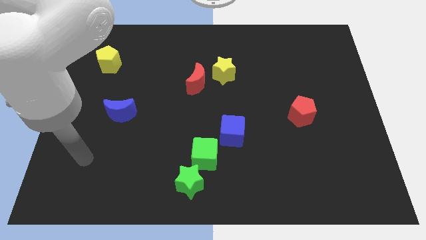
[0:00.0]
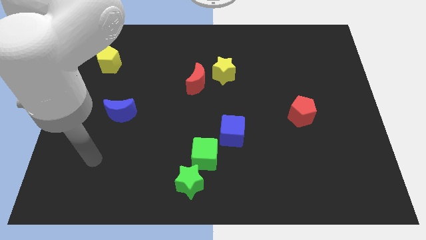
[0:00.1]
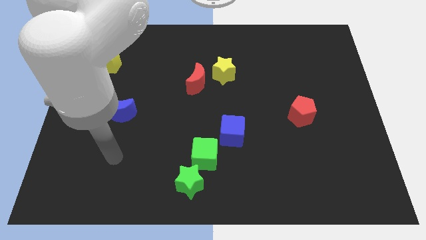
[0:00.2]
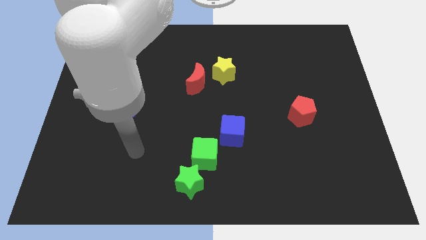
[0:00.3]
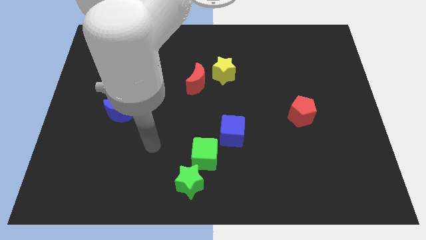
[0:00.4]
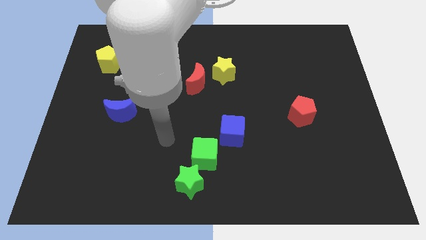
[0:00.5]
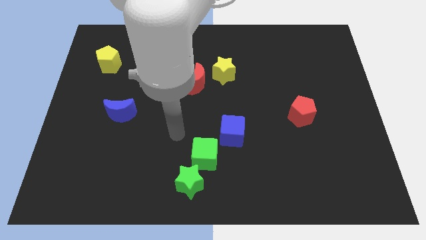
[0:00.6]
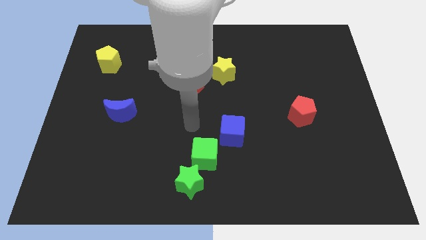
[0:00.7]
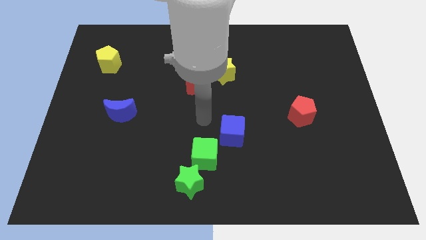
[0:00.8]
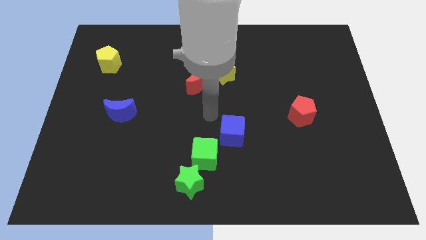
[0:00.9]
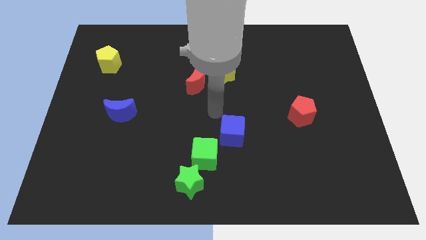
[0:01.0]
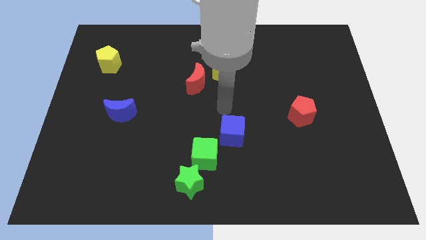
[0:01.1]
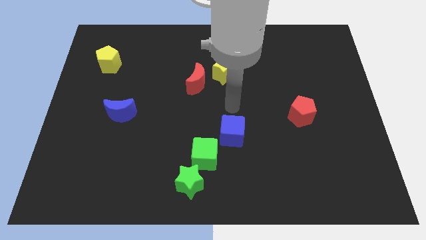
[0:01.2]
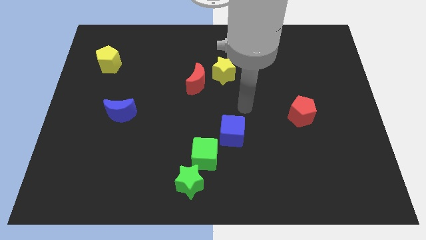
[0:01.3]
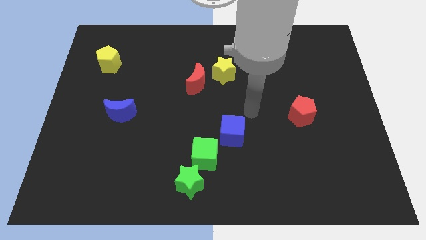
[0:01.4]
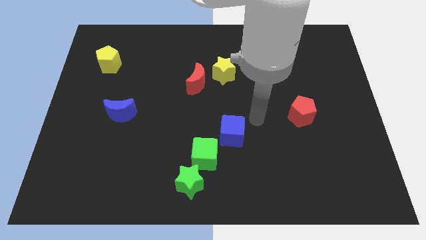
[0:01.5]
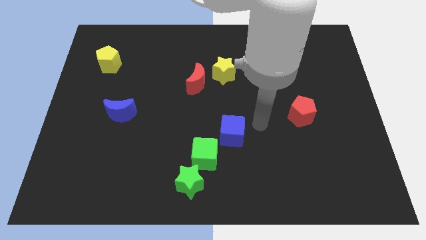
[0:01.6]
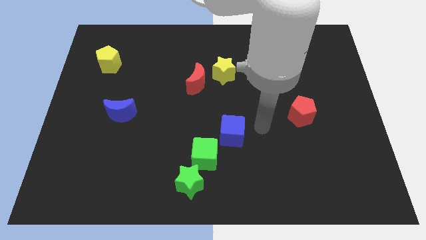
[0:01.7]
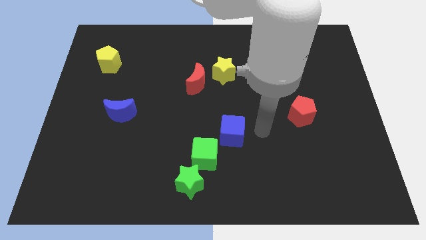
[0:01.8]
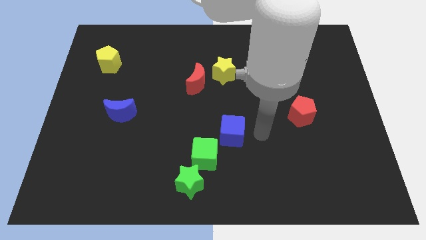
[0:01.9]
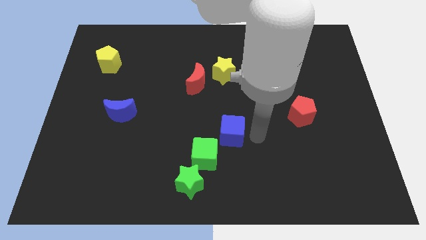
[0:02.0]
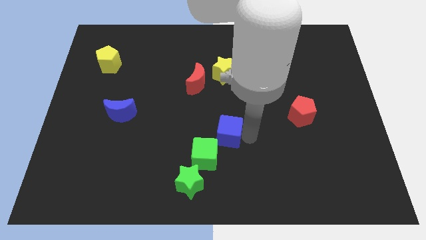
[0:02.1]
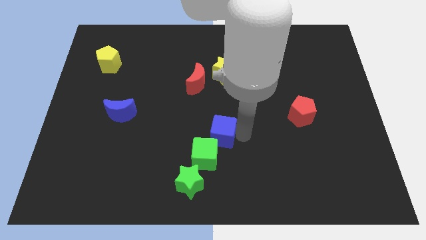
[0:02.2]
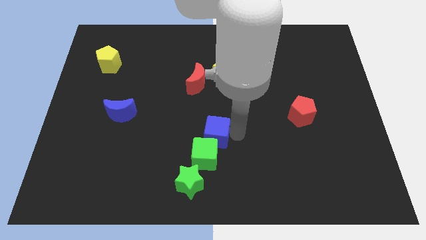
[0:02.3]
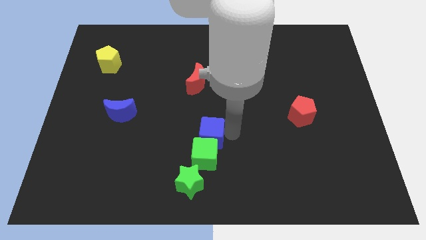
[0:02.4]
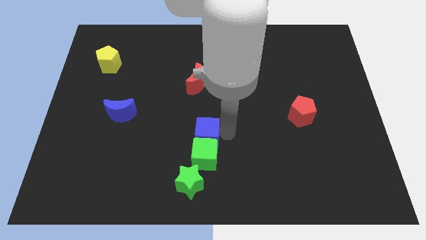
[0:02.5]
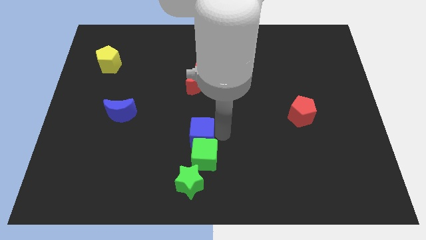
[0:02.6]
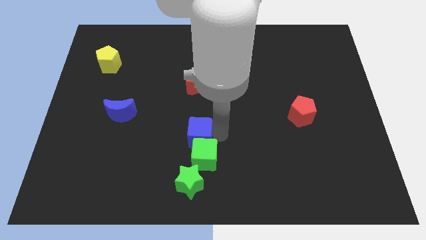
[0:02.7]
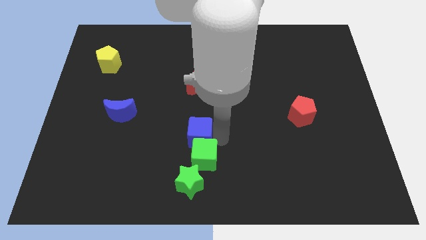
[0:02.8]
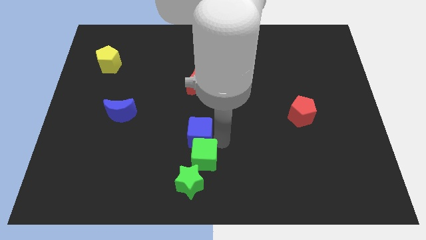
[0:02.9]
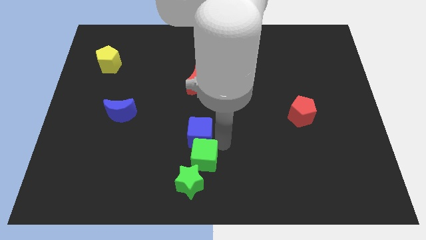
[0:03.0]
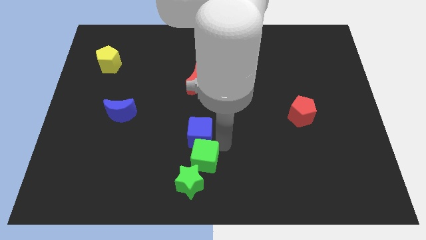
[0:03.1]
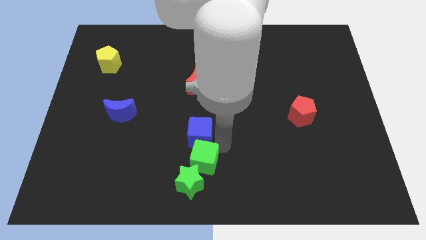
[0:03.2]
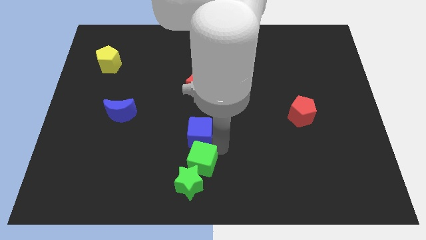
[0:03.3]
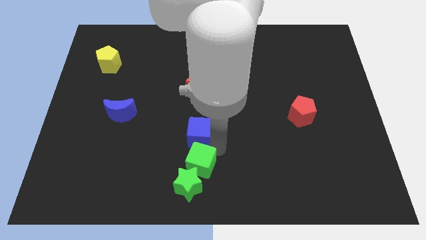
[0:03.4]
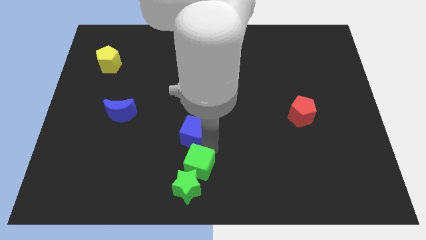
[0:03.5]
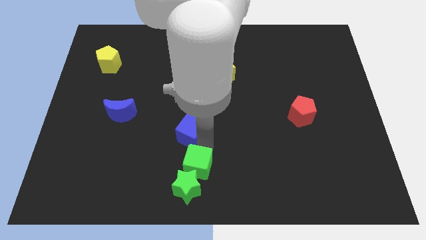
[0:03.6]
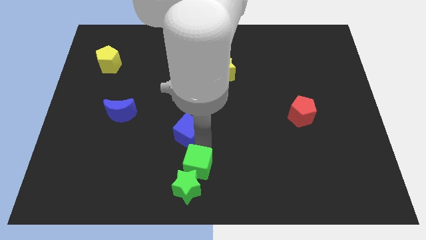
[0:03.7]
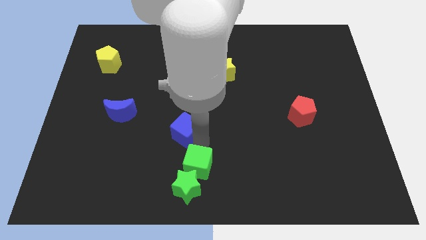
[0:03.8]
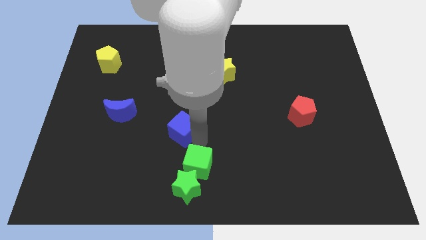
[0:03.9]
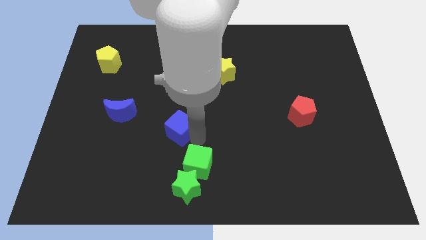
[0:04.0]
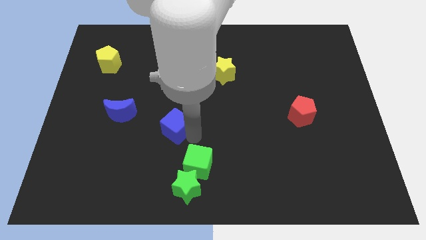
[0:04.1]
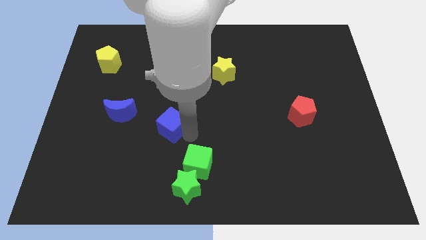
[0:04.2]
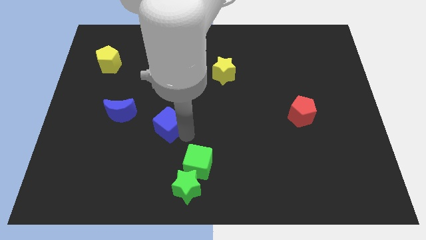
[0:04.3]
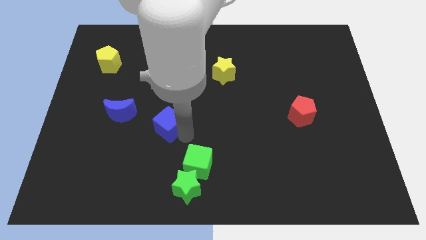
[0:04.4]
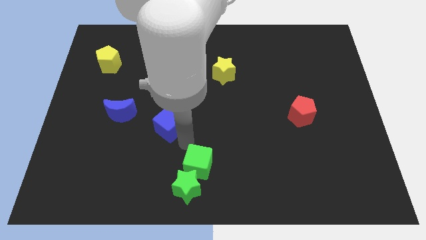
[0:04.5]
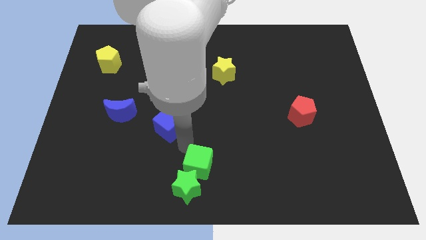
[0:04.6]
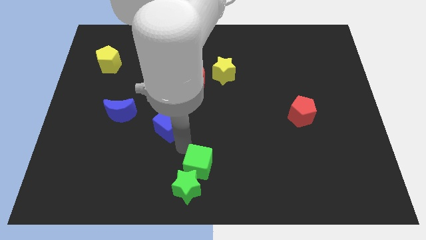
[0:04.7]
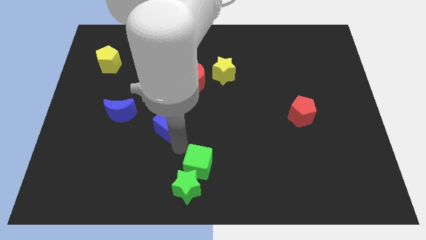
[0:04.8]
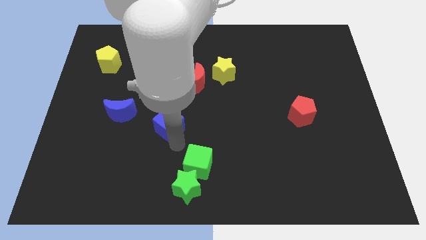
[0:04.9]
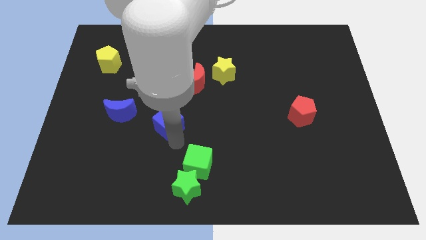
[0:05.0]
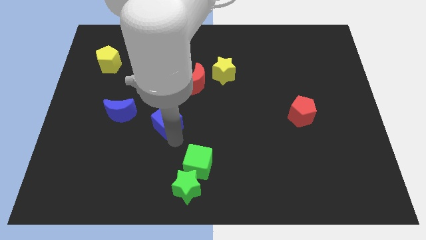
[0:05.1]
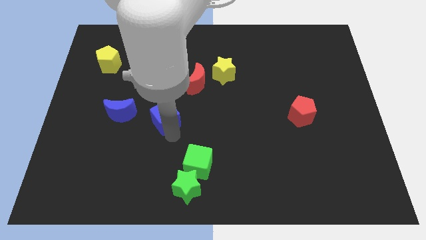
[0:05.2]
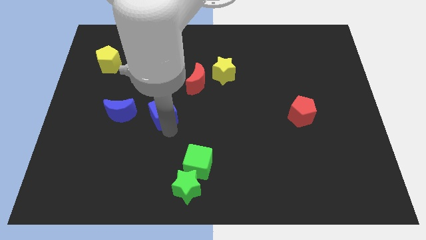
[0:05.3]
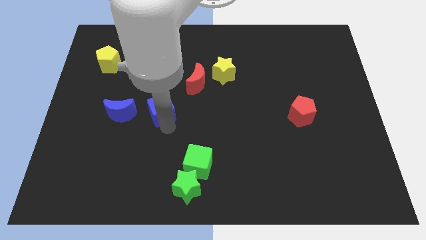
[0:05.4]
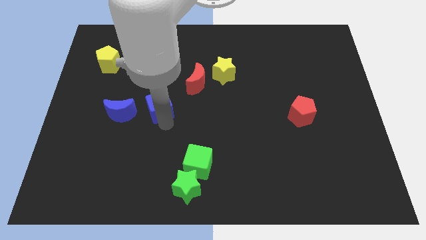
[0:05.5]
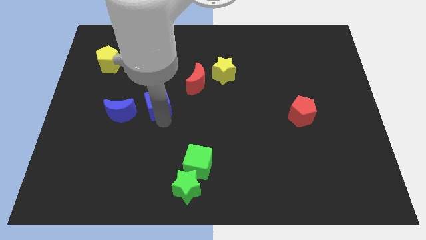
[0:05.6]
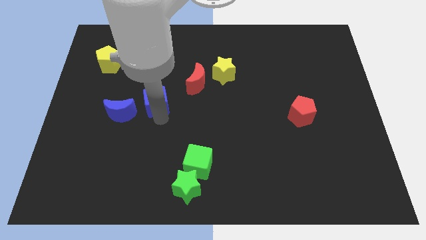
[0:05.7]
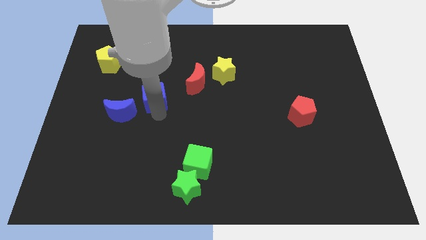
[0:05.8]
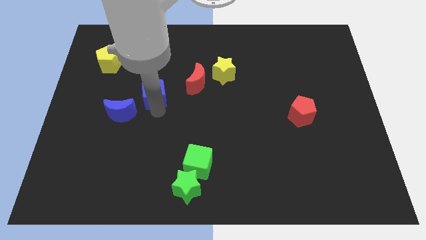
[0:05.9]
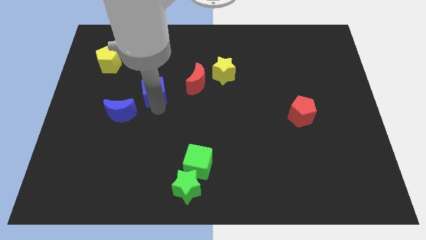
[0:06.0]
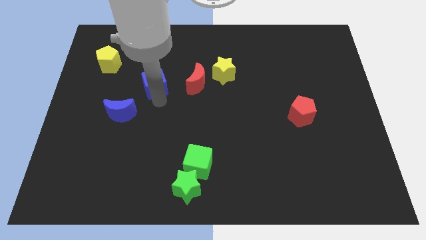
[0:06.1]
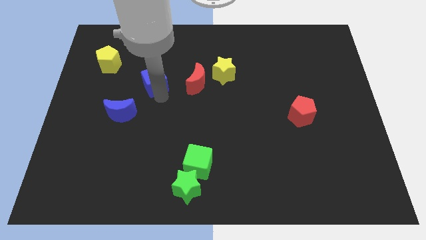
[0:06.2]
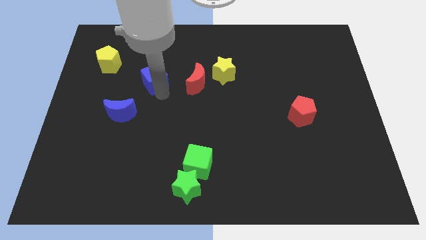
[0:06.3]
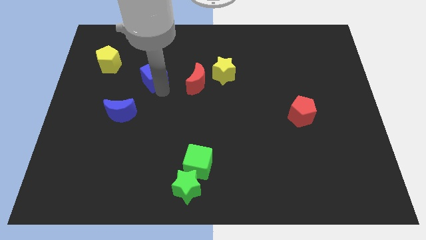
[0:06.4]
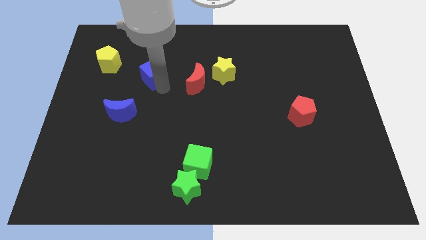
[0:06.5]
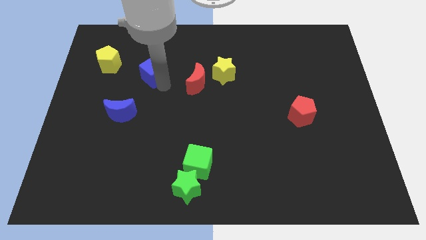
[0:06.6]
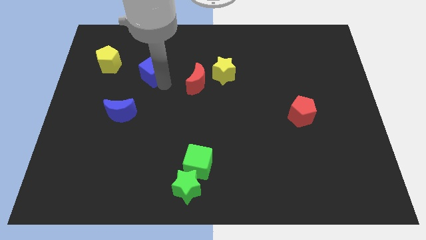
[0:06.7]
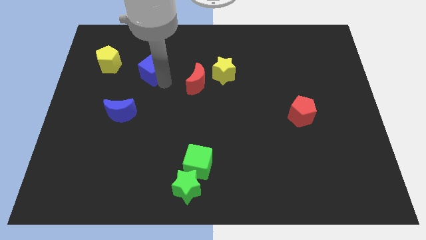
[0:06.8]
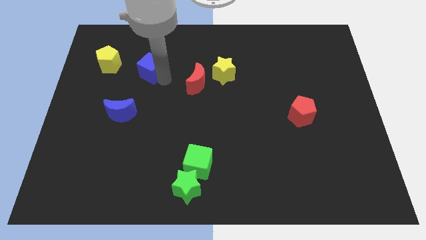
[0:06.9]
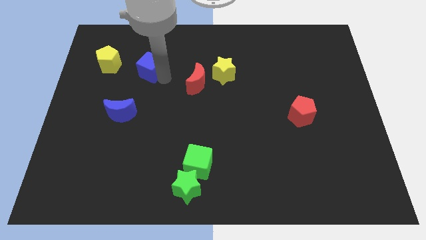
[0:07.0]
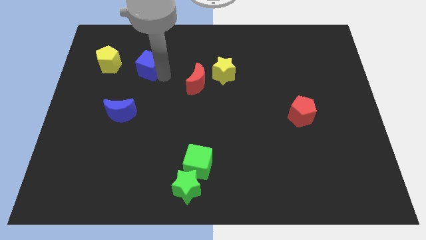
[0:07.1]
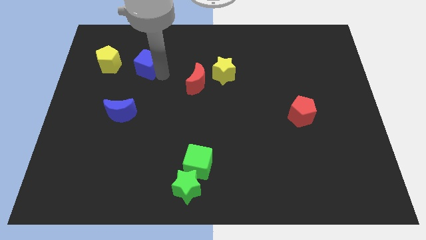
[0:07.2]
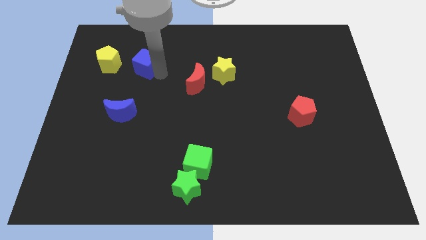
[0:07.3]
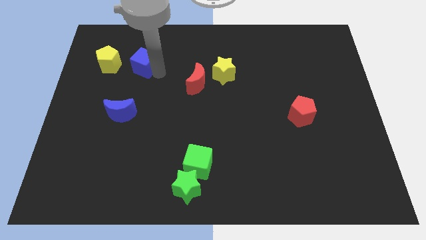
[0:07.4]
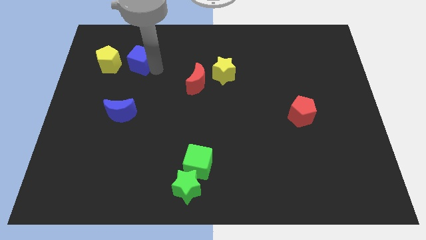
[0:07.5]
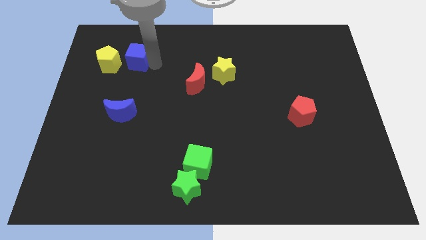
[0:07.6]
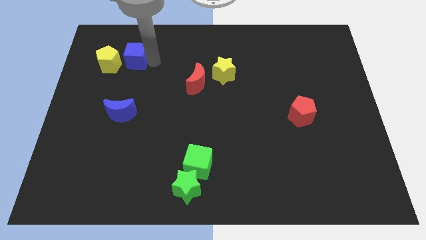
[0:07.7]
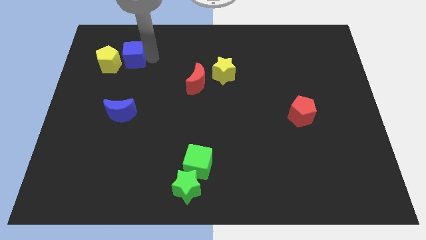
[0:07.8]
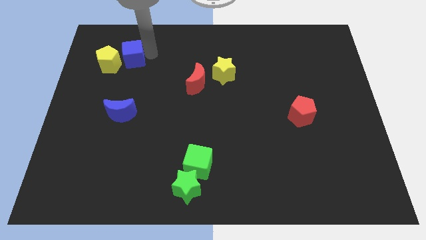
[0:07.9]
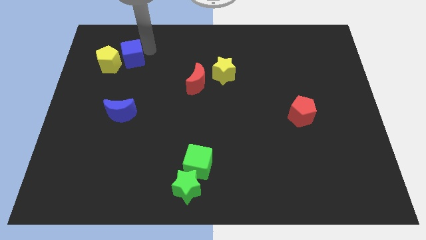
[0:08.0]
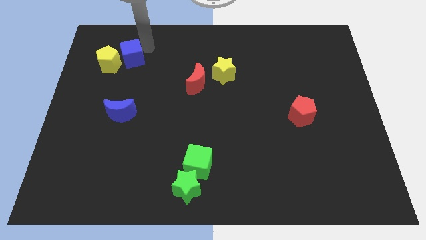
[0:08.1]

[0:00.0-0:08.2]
put the blue cube towards the yellow pentagon
